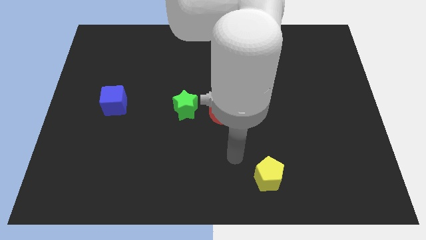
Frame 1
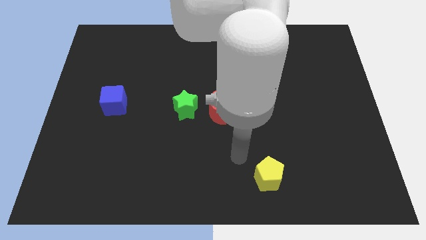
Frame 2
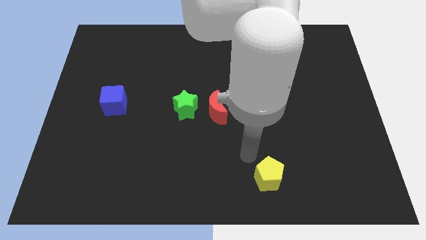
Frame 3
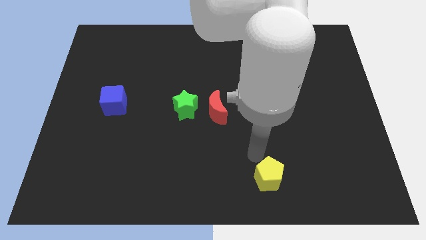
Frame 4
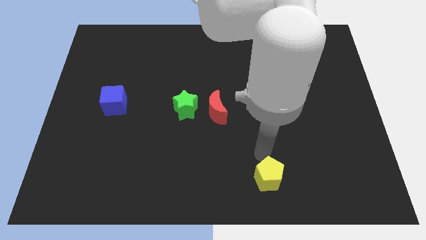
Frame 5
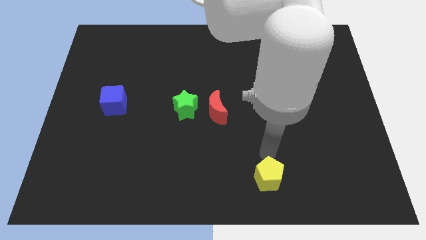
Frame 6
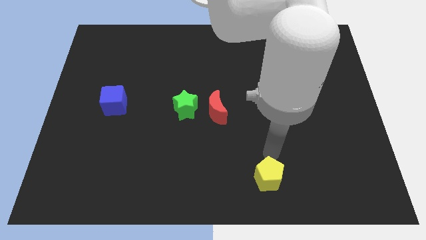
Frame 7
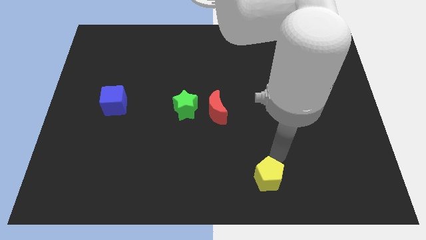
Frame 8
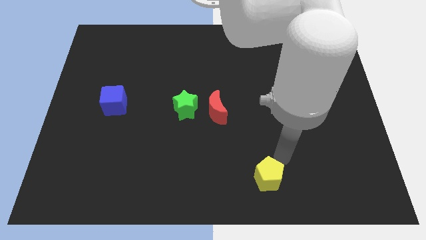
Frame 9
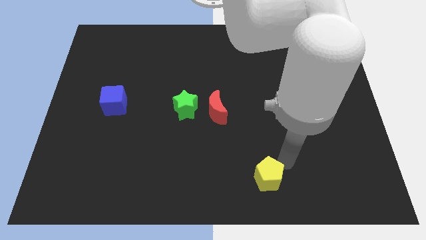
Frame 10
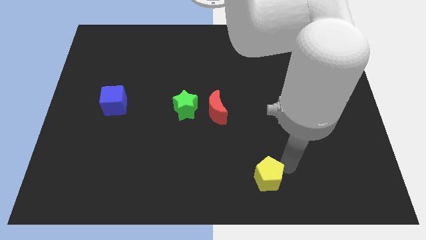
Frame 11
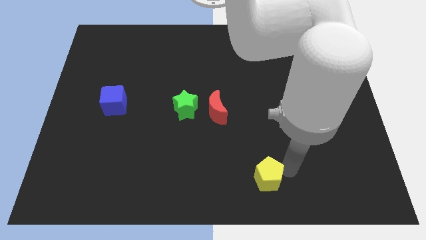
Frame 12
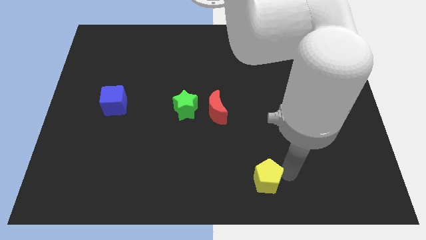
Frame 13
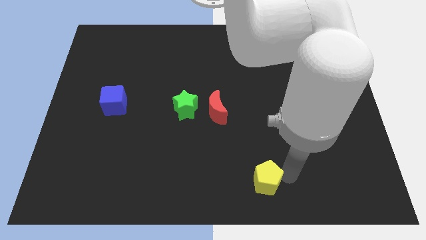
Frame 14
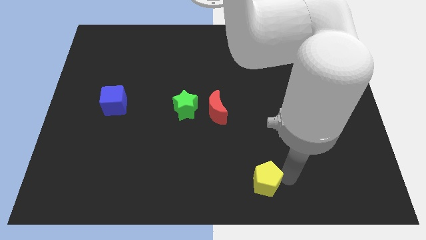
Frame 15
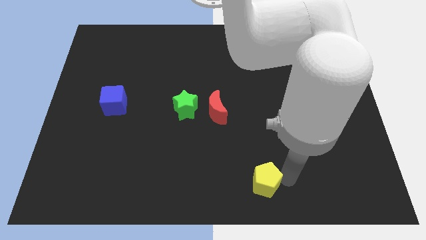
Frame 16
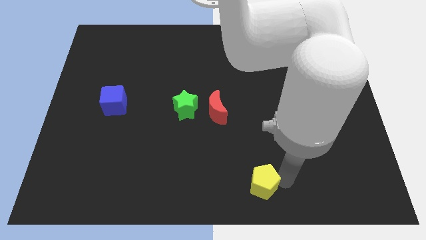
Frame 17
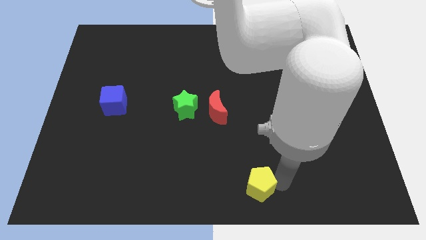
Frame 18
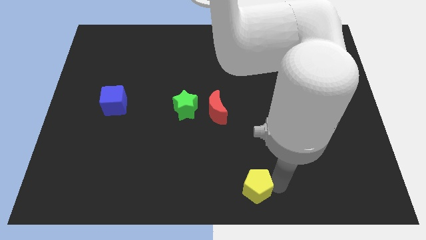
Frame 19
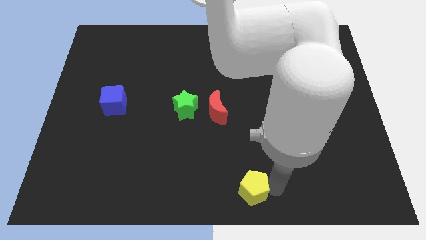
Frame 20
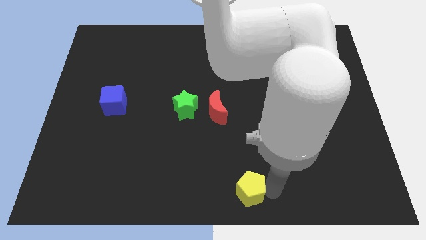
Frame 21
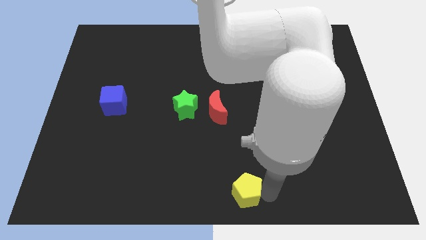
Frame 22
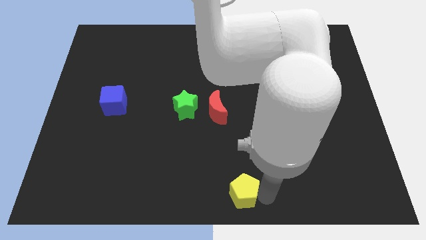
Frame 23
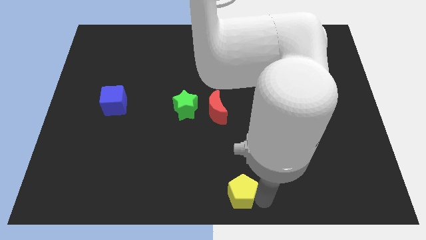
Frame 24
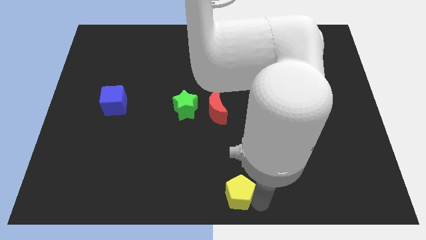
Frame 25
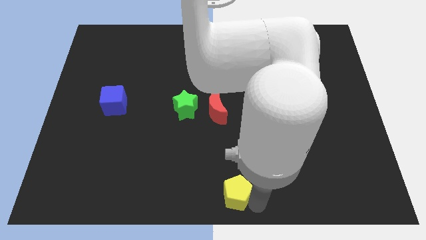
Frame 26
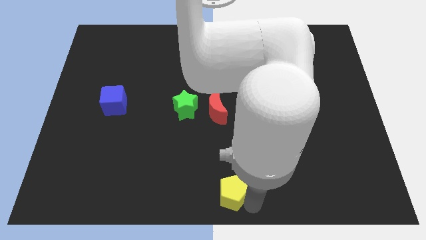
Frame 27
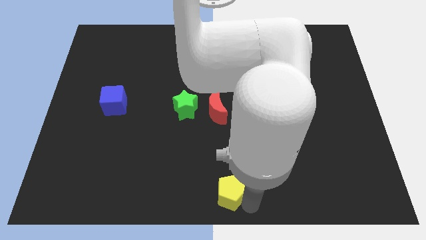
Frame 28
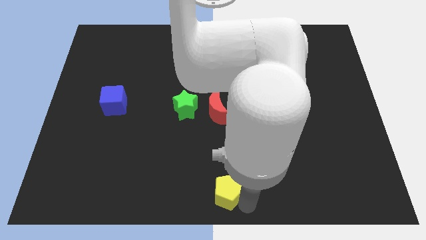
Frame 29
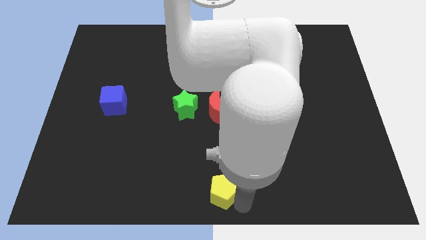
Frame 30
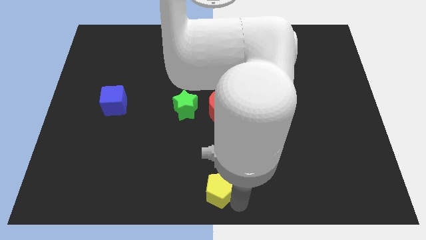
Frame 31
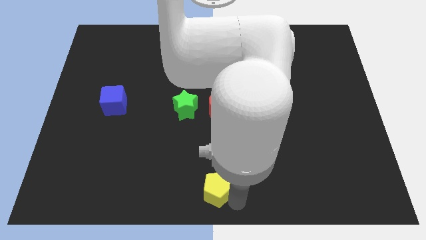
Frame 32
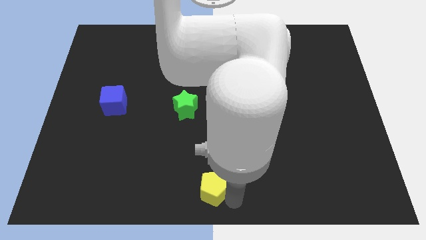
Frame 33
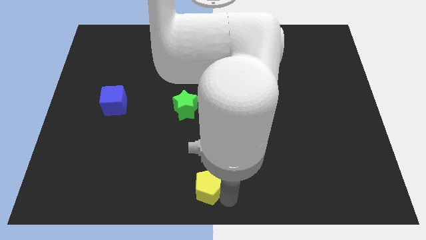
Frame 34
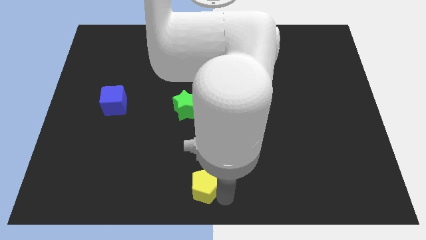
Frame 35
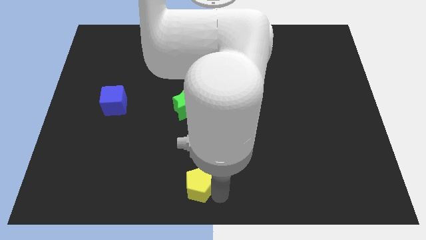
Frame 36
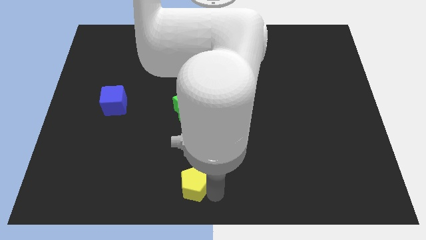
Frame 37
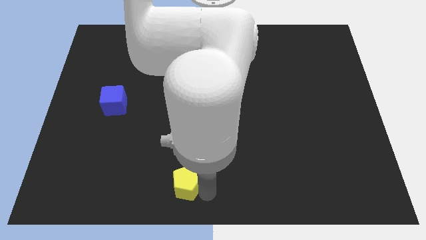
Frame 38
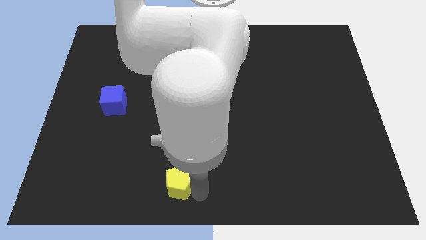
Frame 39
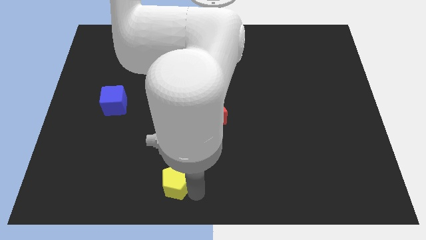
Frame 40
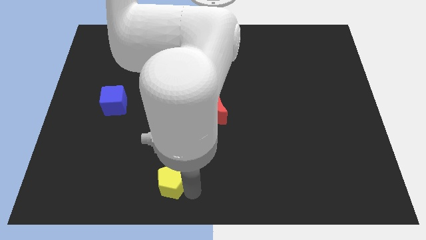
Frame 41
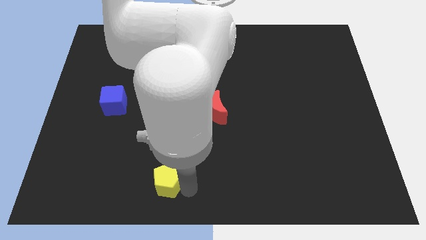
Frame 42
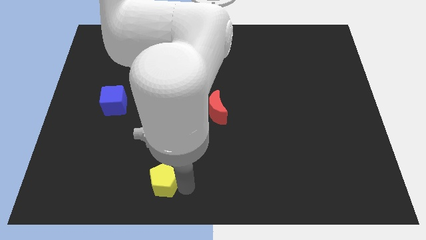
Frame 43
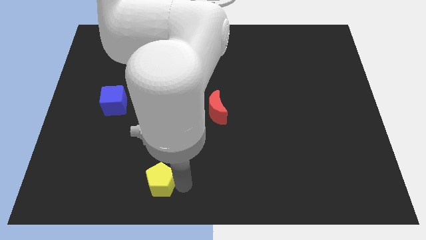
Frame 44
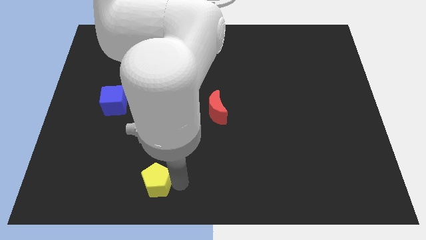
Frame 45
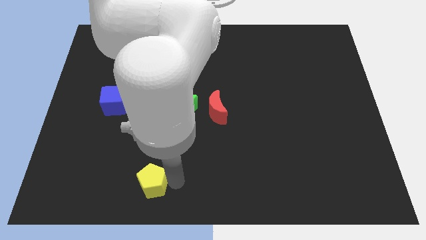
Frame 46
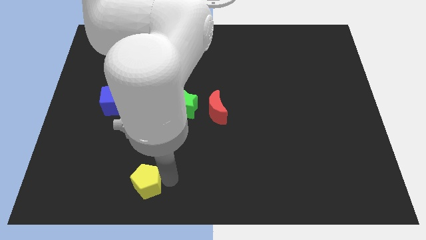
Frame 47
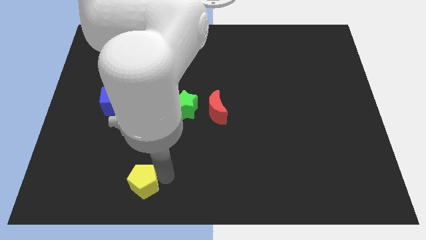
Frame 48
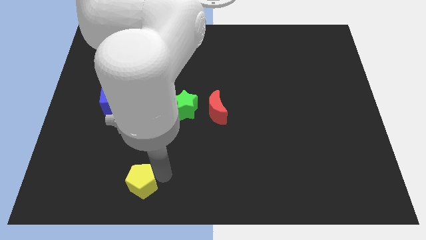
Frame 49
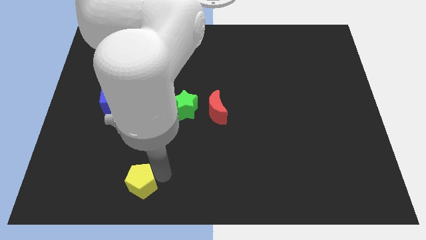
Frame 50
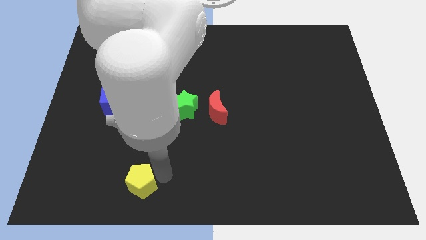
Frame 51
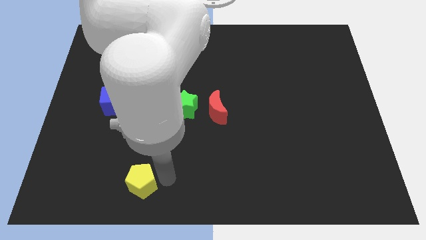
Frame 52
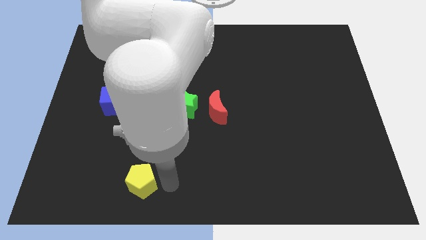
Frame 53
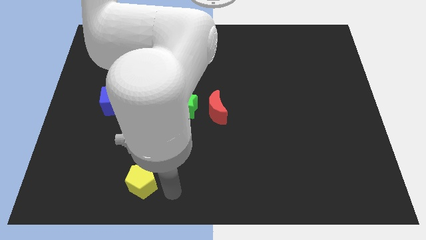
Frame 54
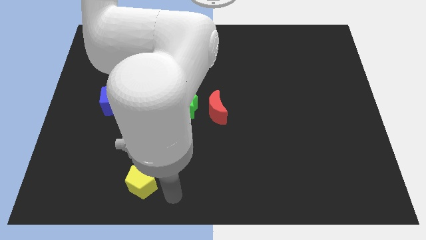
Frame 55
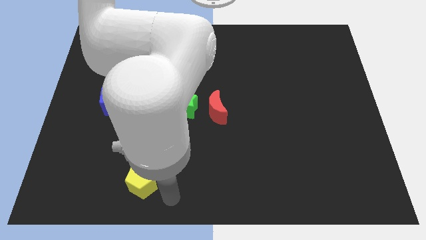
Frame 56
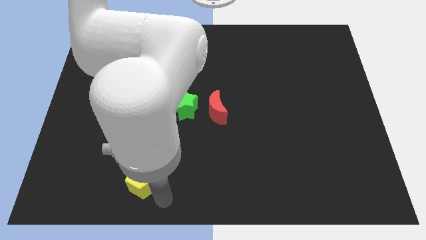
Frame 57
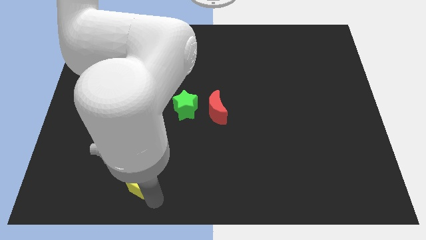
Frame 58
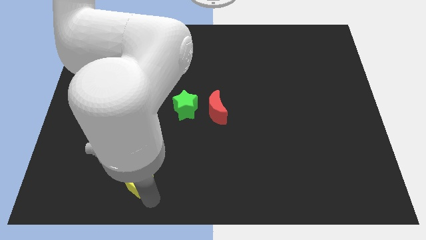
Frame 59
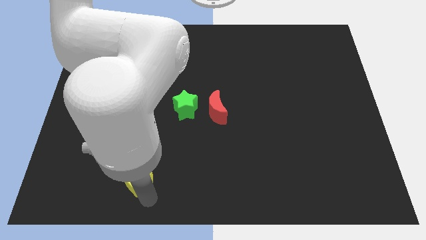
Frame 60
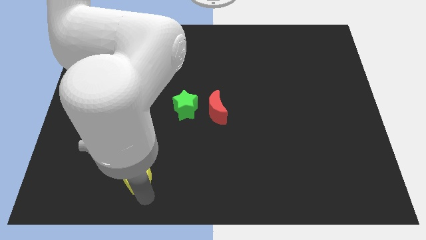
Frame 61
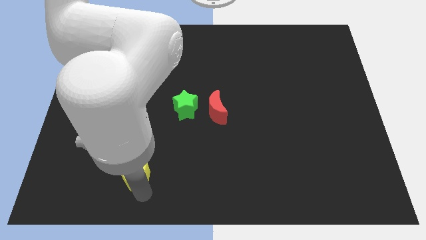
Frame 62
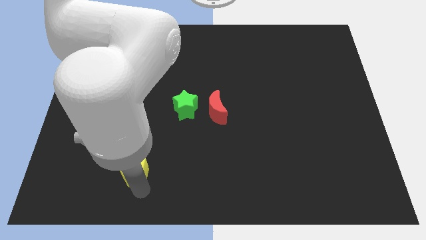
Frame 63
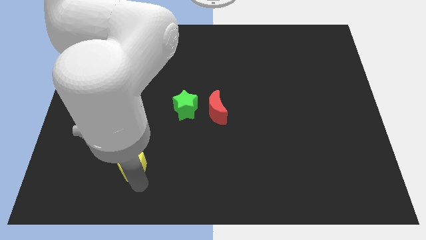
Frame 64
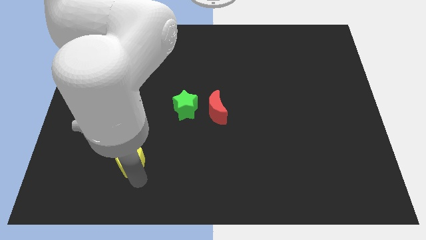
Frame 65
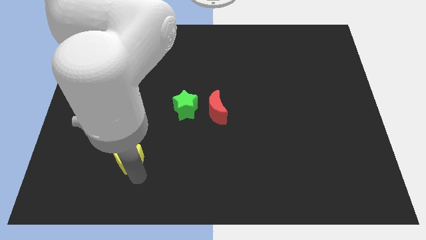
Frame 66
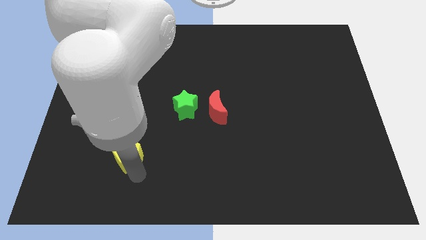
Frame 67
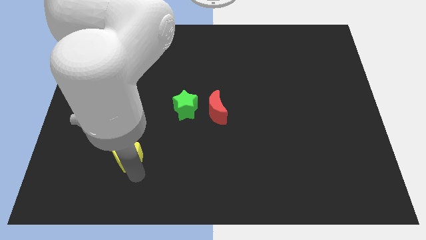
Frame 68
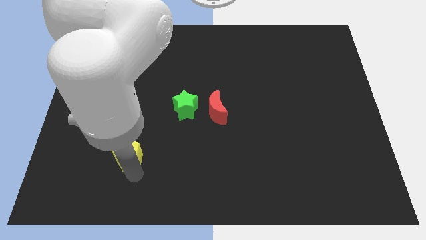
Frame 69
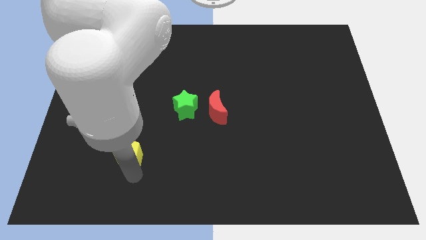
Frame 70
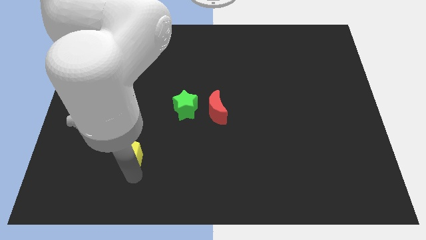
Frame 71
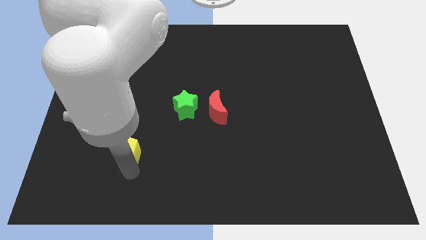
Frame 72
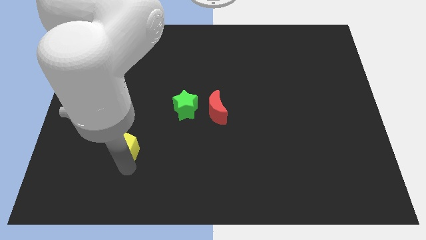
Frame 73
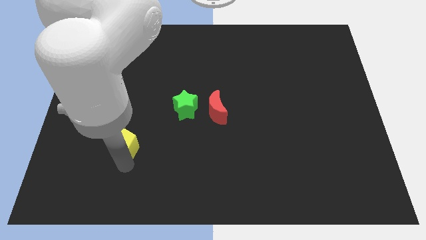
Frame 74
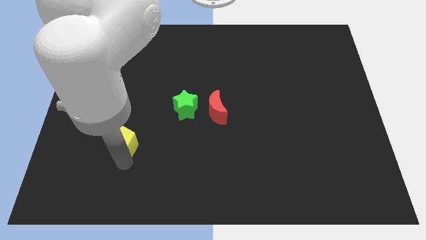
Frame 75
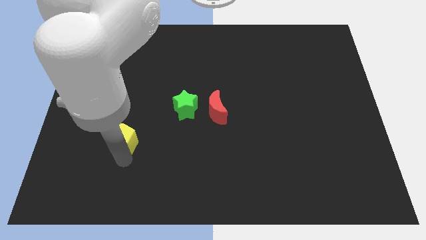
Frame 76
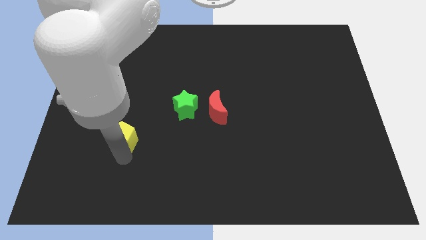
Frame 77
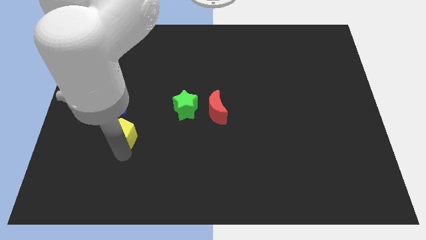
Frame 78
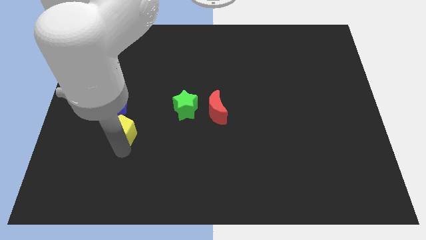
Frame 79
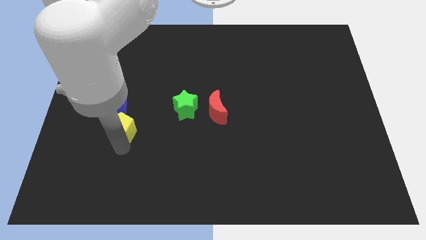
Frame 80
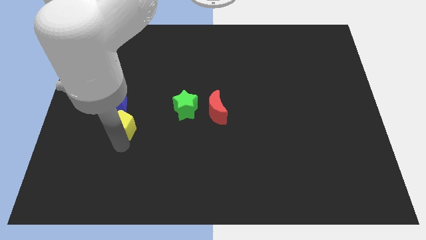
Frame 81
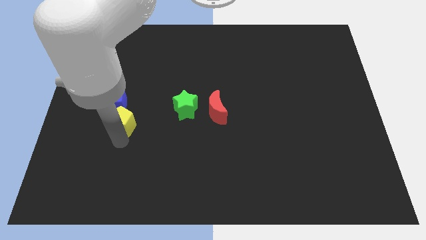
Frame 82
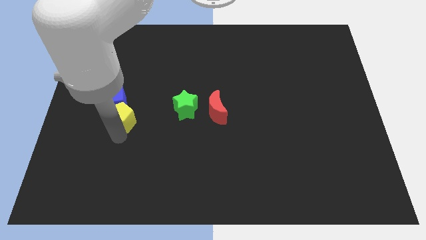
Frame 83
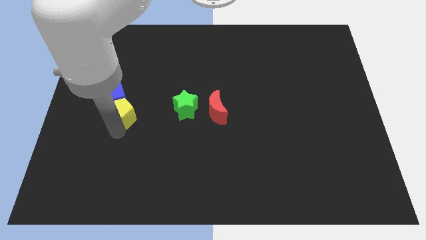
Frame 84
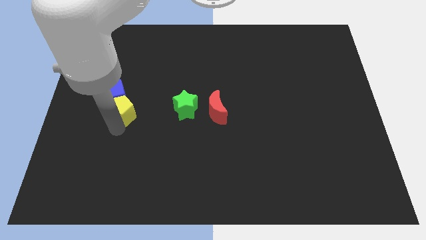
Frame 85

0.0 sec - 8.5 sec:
push the pentagon close to the blue cube
